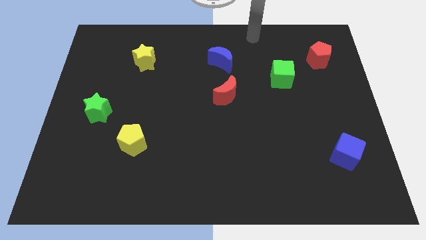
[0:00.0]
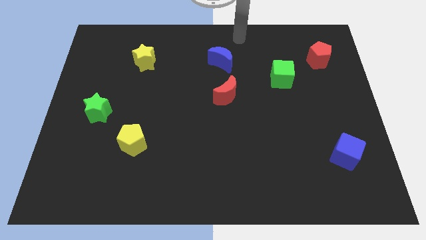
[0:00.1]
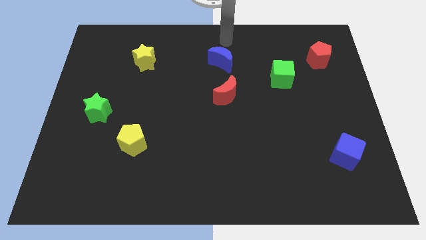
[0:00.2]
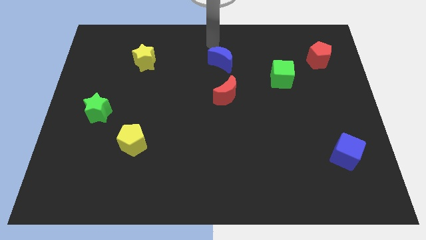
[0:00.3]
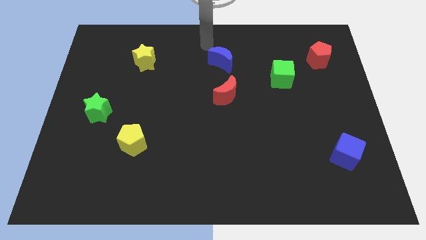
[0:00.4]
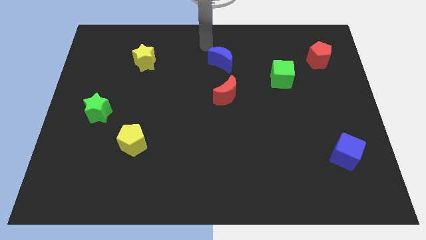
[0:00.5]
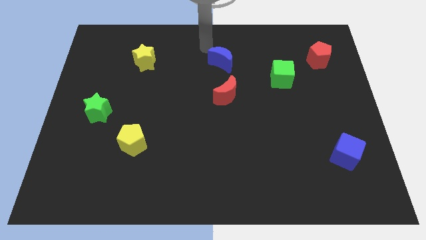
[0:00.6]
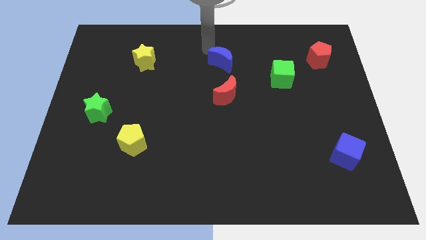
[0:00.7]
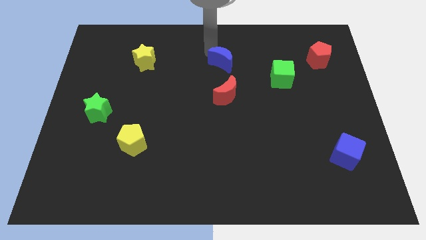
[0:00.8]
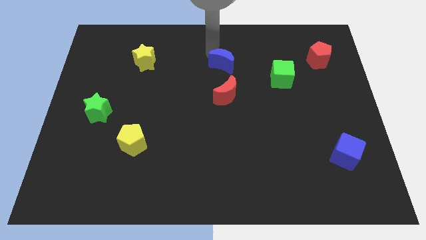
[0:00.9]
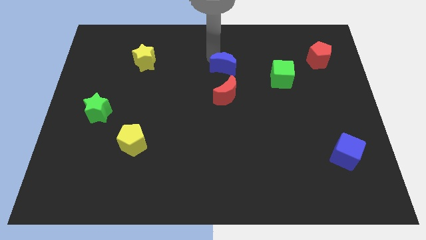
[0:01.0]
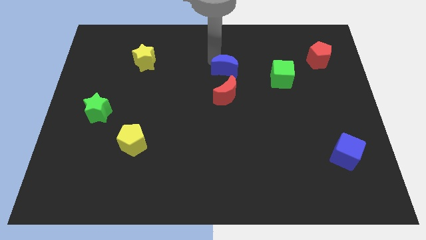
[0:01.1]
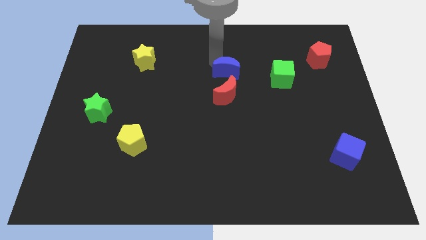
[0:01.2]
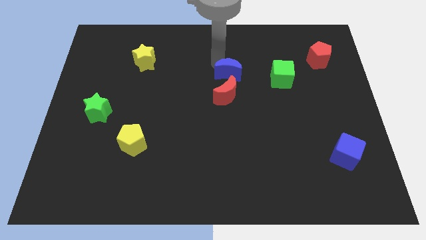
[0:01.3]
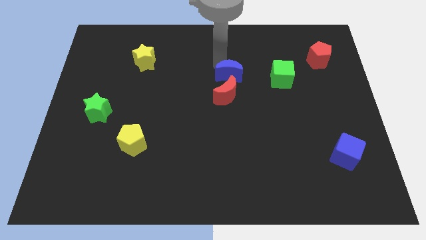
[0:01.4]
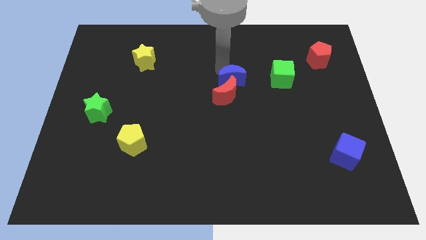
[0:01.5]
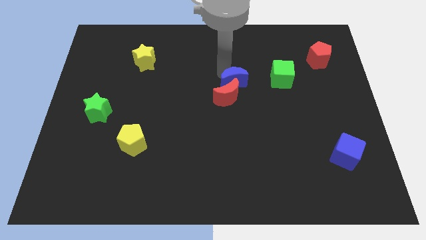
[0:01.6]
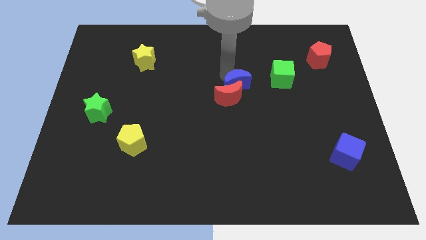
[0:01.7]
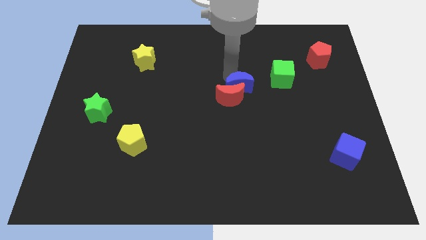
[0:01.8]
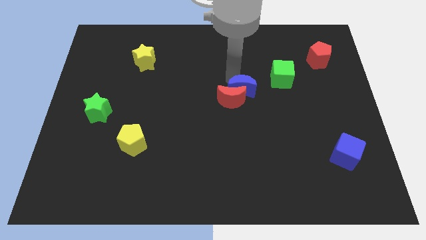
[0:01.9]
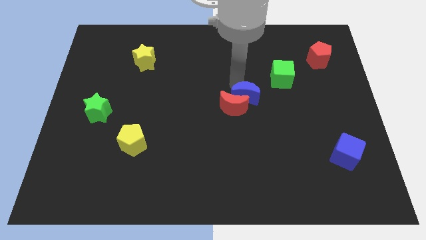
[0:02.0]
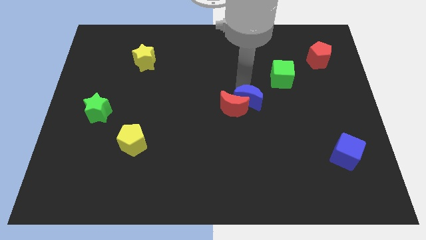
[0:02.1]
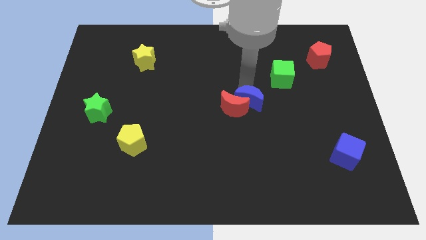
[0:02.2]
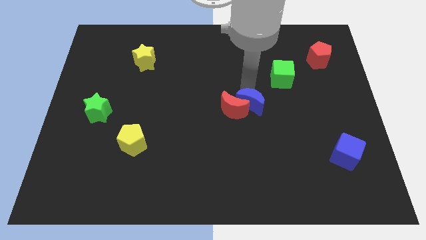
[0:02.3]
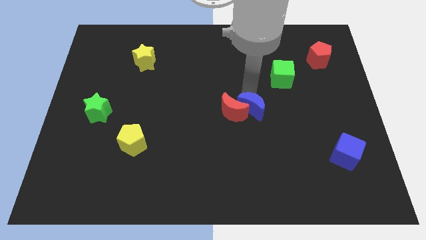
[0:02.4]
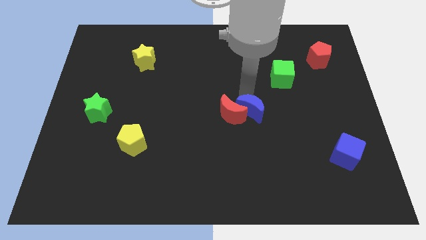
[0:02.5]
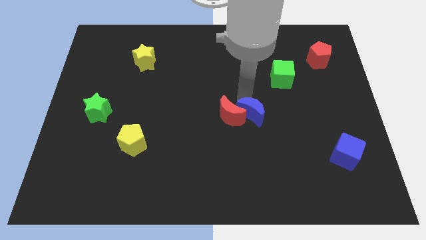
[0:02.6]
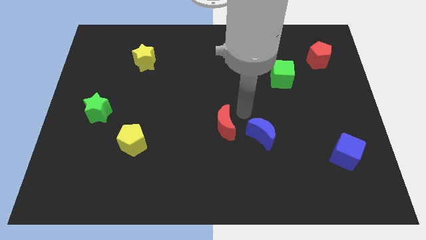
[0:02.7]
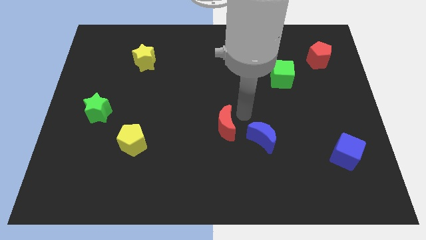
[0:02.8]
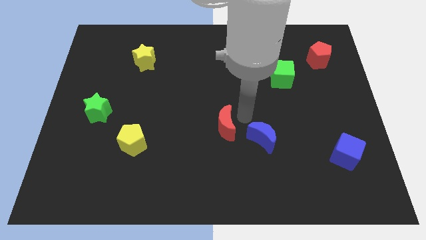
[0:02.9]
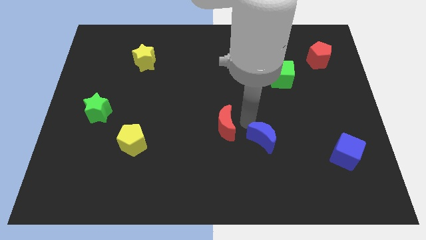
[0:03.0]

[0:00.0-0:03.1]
slide blue moon away from the center

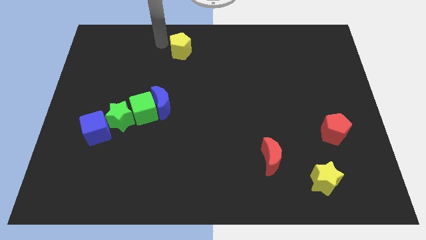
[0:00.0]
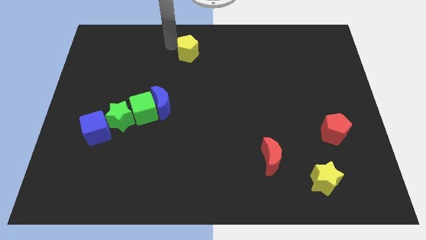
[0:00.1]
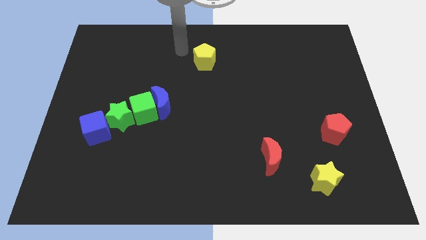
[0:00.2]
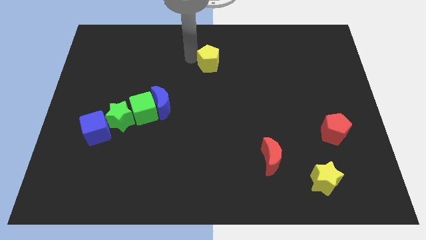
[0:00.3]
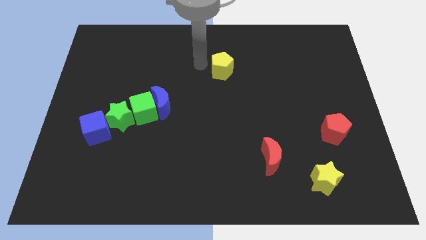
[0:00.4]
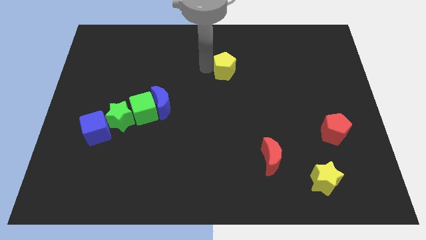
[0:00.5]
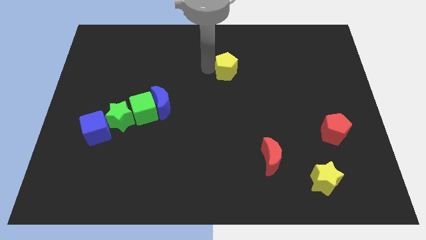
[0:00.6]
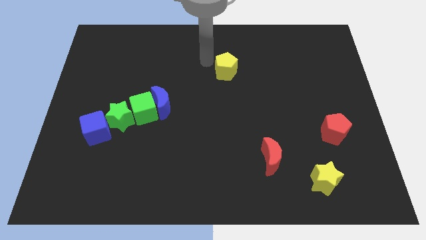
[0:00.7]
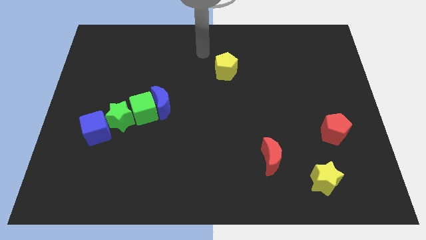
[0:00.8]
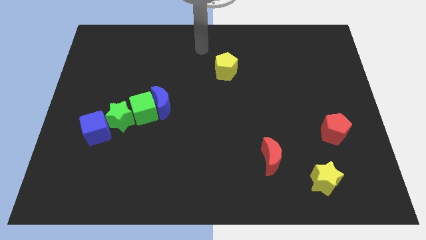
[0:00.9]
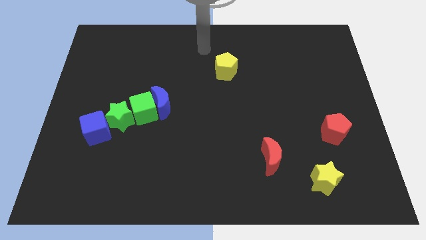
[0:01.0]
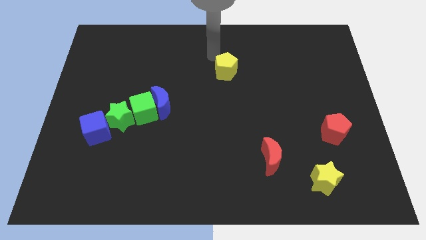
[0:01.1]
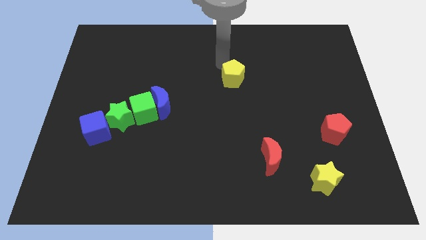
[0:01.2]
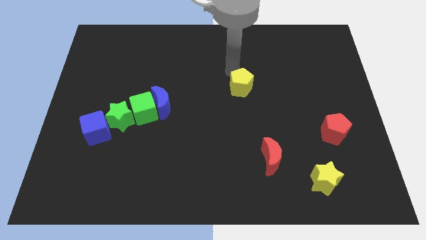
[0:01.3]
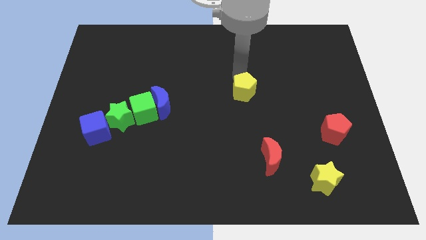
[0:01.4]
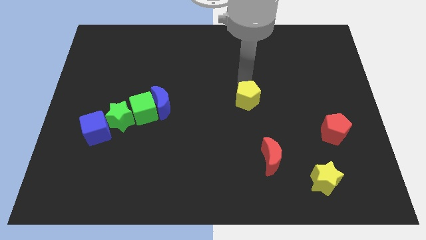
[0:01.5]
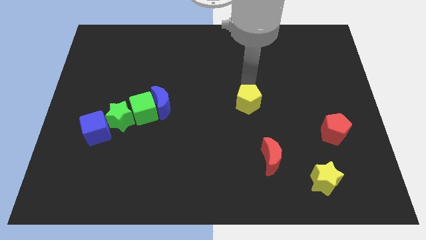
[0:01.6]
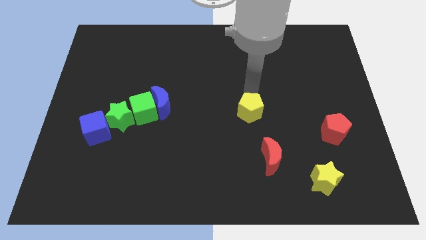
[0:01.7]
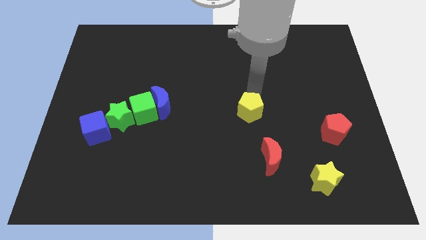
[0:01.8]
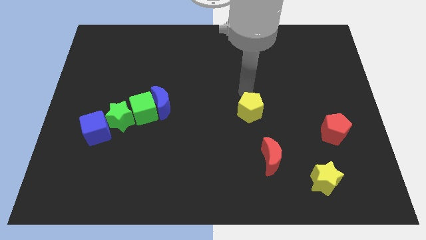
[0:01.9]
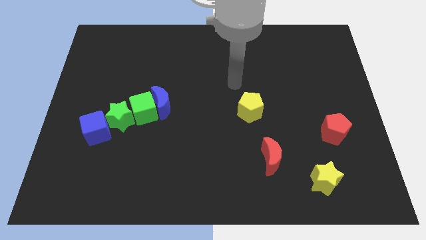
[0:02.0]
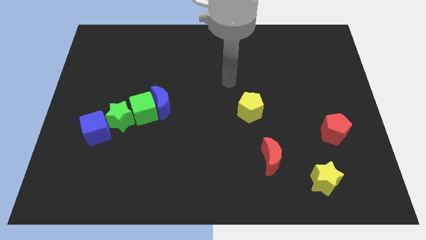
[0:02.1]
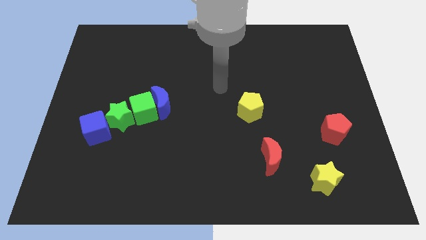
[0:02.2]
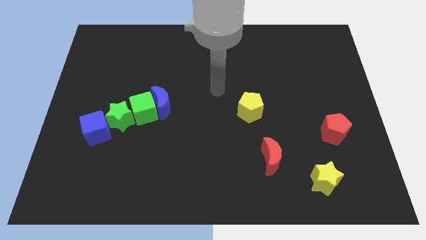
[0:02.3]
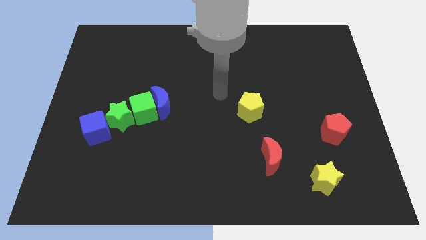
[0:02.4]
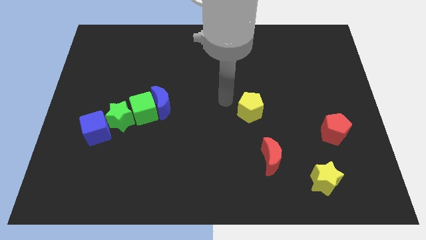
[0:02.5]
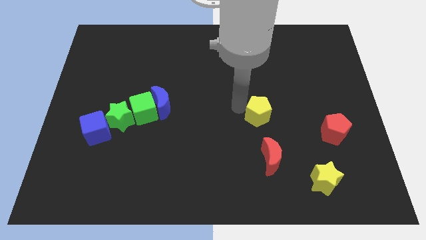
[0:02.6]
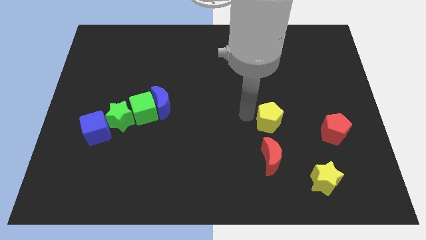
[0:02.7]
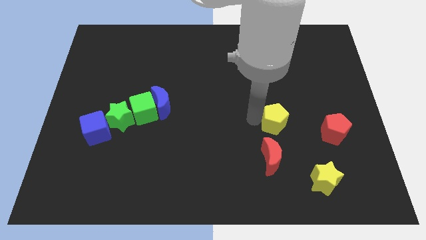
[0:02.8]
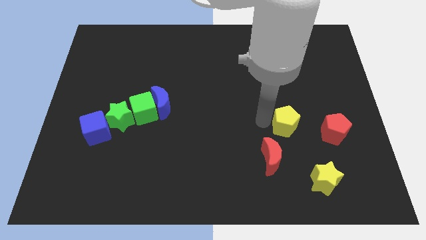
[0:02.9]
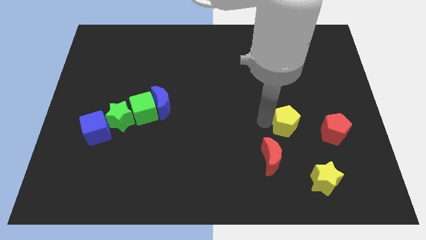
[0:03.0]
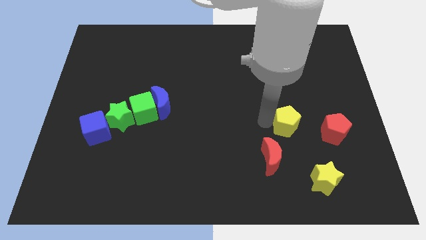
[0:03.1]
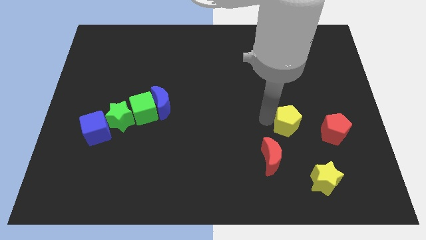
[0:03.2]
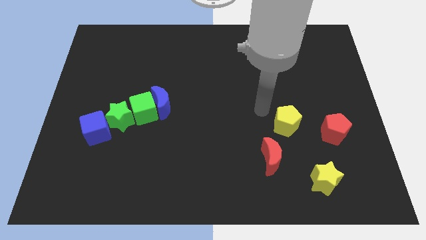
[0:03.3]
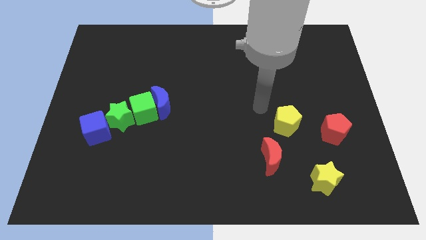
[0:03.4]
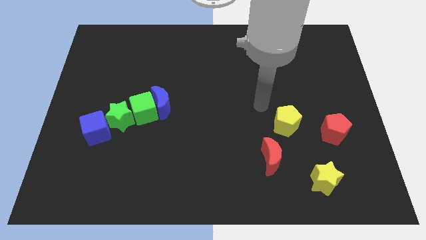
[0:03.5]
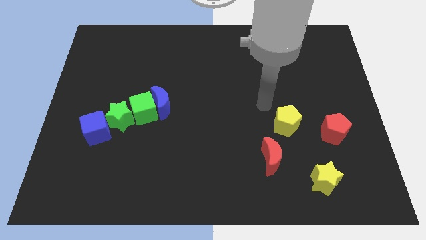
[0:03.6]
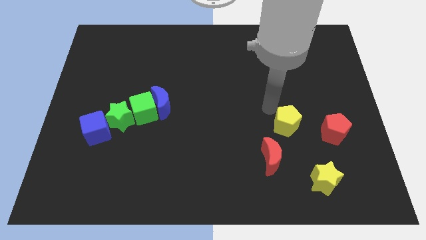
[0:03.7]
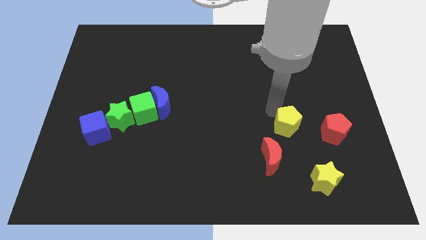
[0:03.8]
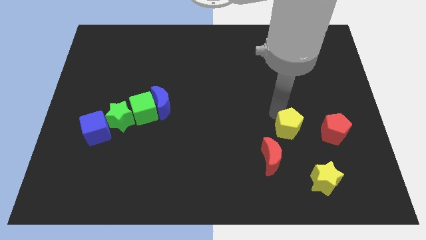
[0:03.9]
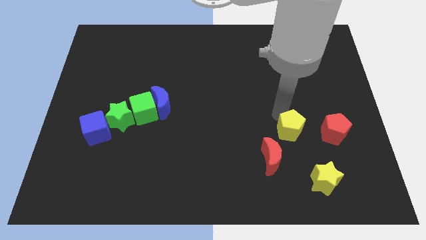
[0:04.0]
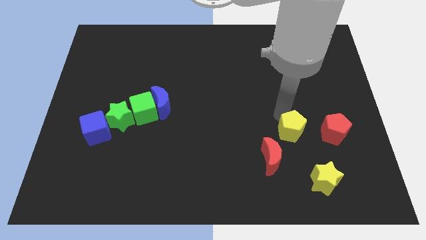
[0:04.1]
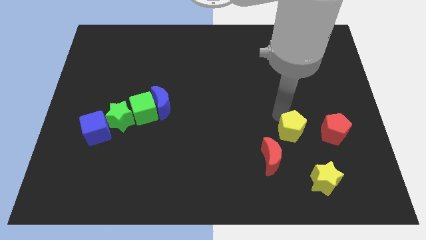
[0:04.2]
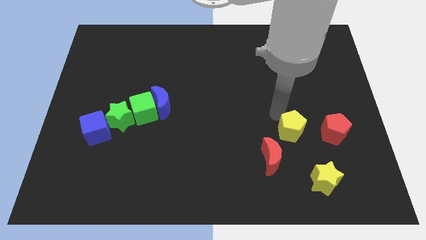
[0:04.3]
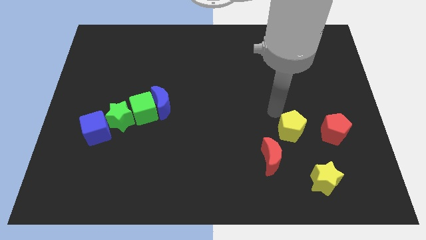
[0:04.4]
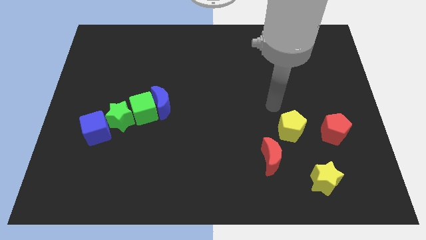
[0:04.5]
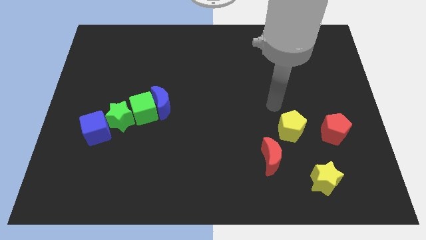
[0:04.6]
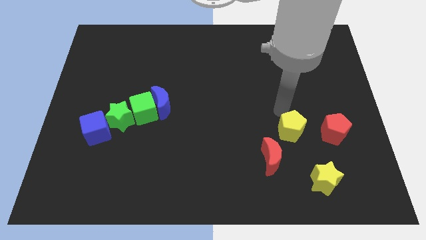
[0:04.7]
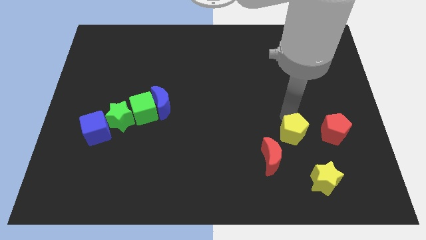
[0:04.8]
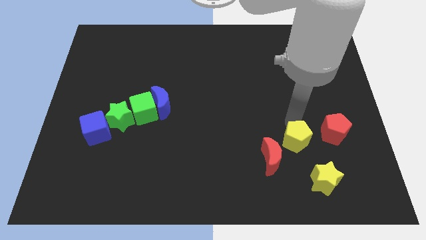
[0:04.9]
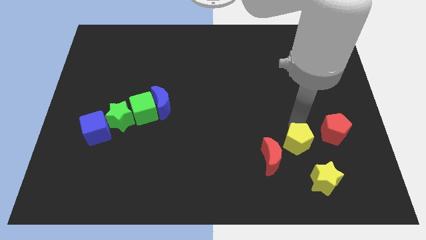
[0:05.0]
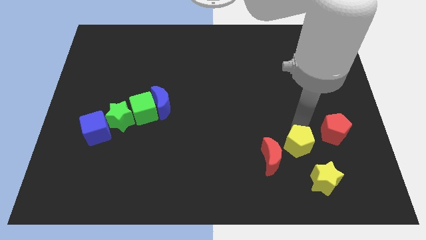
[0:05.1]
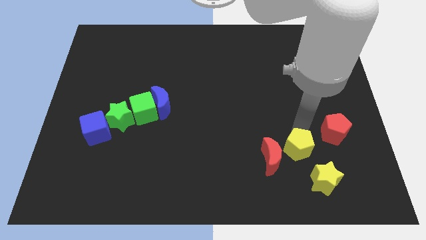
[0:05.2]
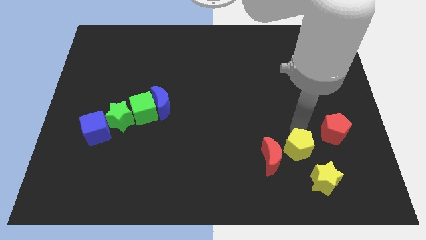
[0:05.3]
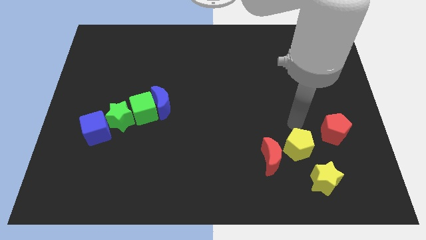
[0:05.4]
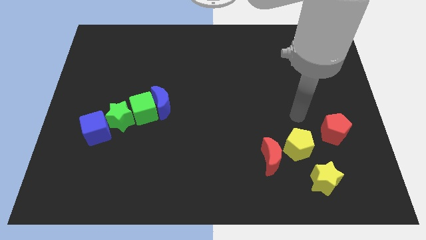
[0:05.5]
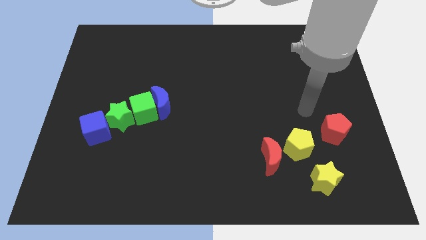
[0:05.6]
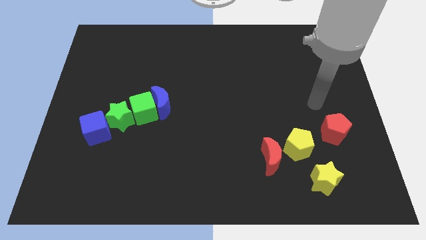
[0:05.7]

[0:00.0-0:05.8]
push the yellow pentagon towards the yellow star

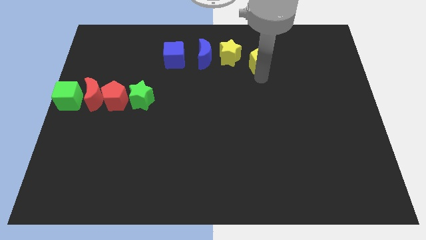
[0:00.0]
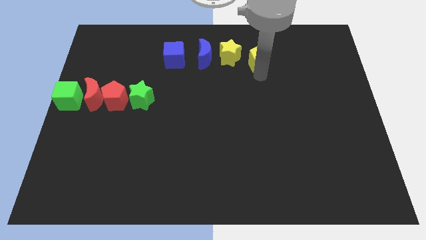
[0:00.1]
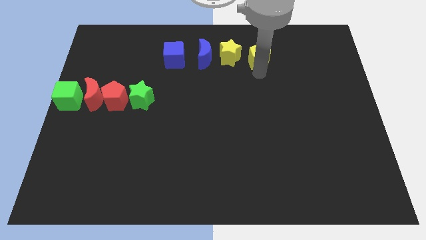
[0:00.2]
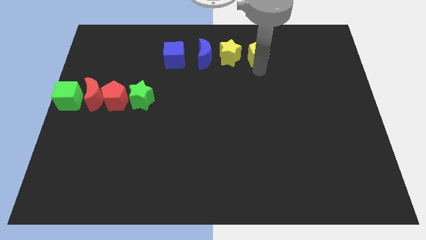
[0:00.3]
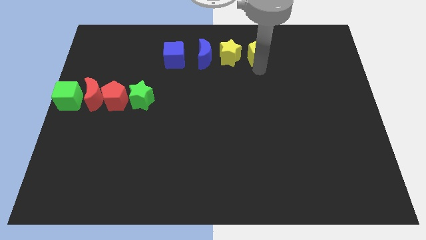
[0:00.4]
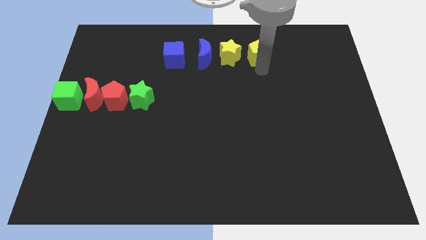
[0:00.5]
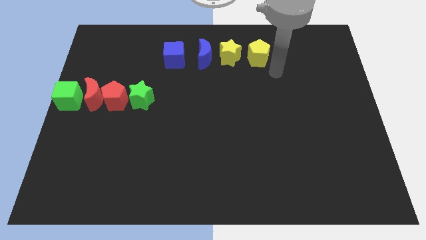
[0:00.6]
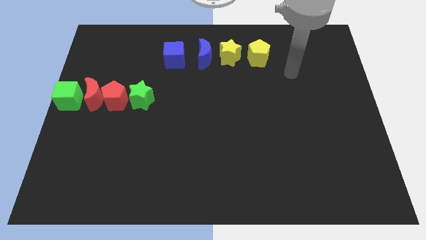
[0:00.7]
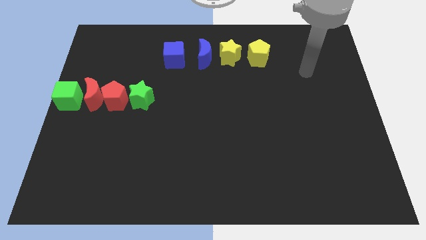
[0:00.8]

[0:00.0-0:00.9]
place the yellow pentagon to the right side of yellow star
